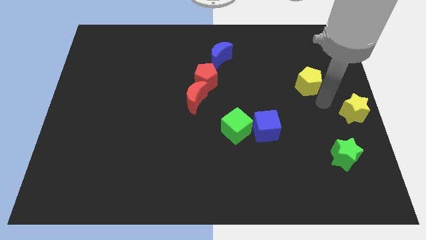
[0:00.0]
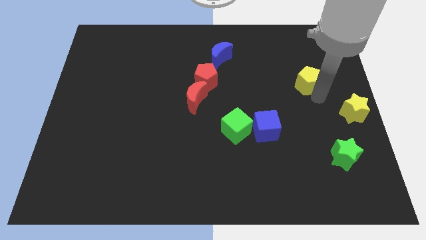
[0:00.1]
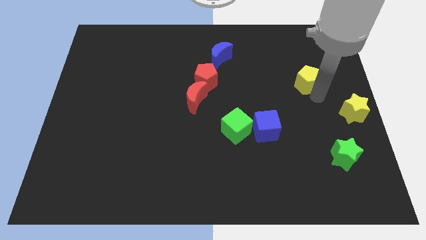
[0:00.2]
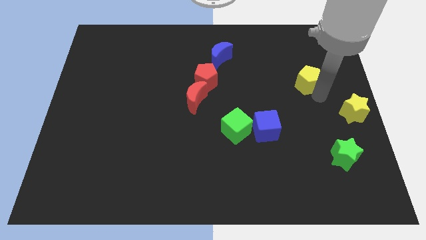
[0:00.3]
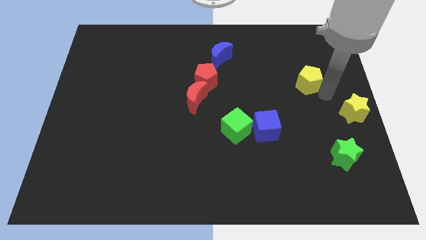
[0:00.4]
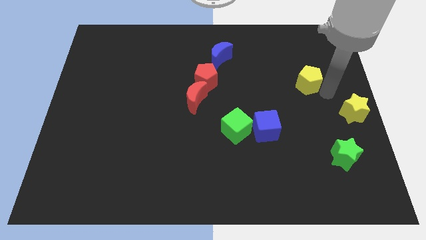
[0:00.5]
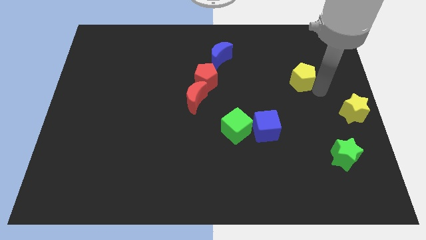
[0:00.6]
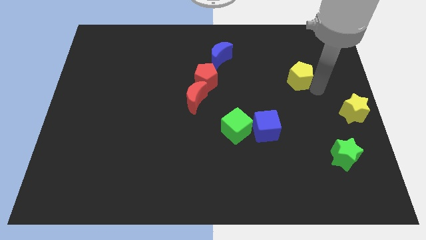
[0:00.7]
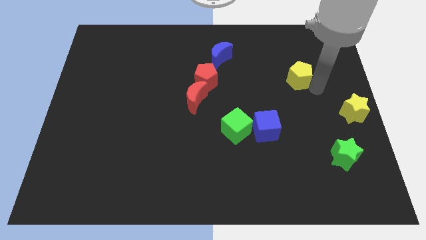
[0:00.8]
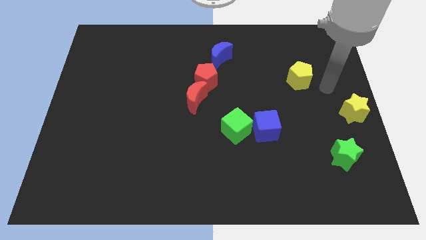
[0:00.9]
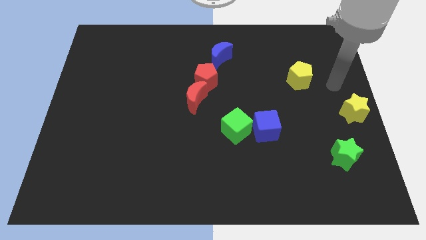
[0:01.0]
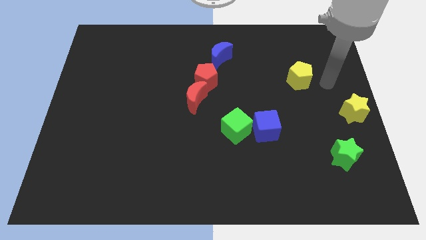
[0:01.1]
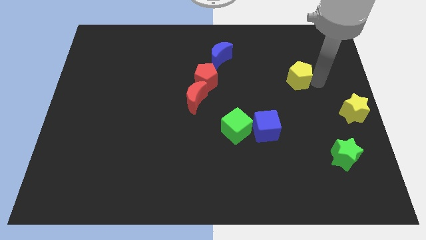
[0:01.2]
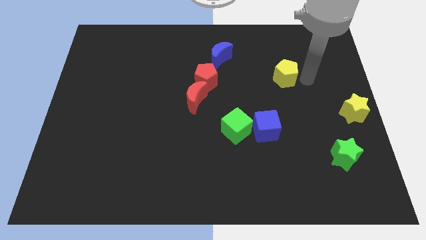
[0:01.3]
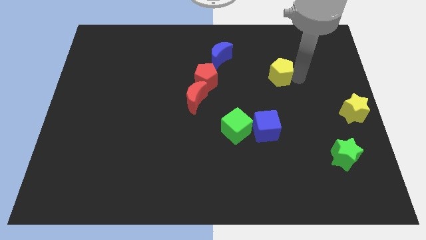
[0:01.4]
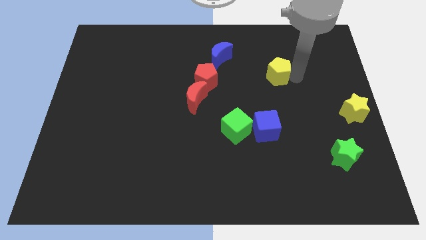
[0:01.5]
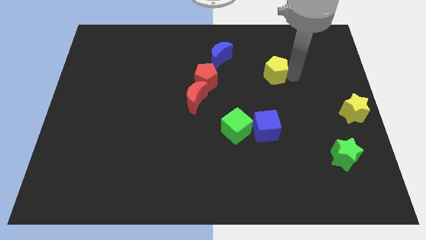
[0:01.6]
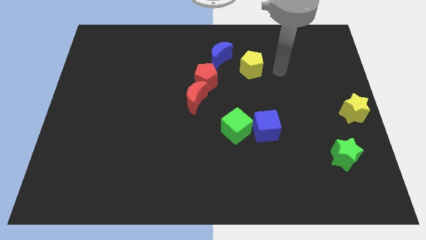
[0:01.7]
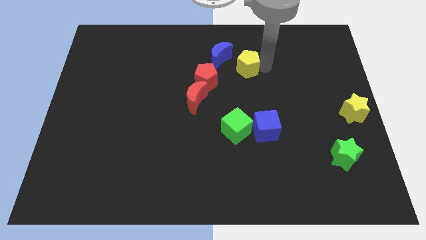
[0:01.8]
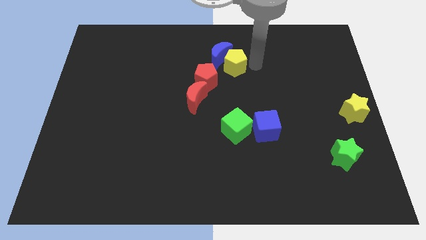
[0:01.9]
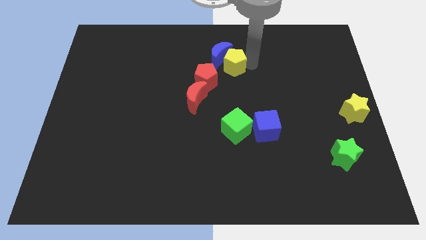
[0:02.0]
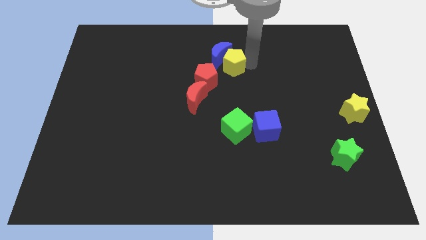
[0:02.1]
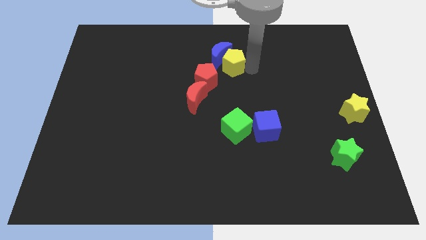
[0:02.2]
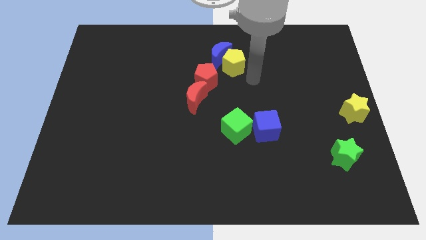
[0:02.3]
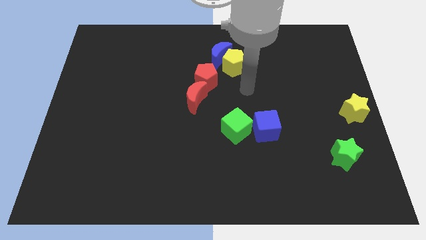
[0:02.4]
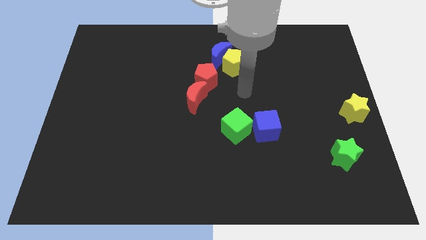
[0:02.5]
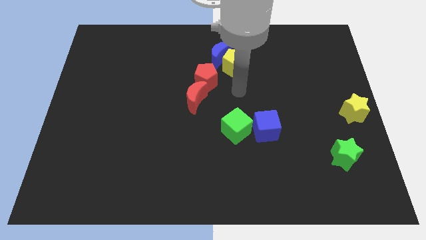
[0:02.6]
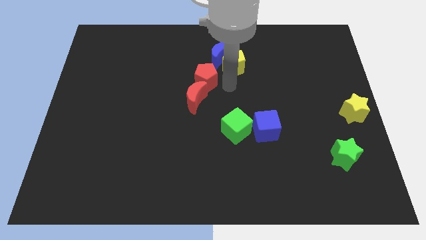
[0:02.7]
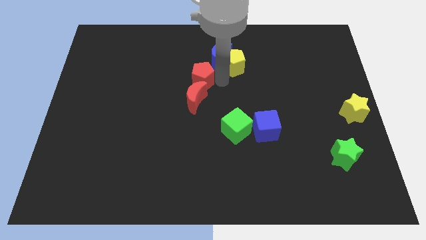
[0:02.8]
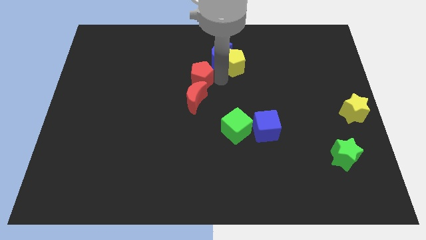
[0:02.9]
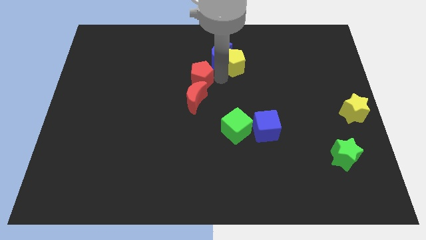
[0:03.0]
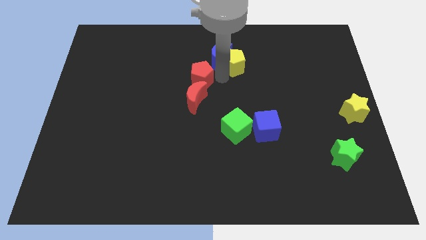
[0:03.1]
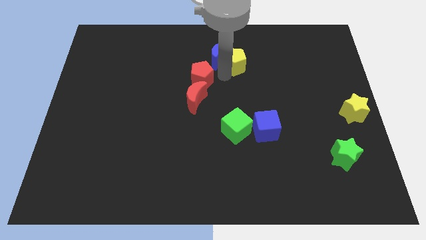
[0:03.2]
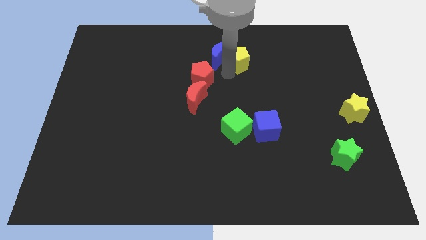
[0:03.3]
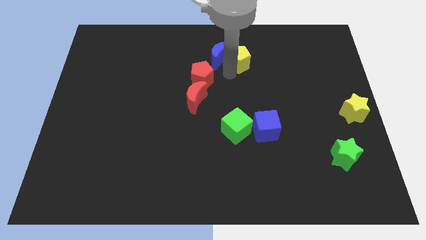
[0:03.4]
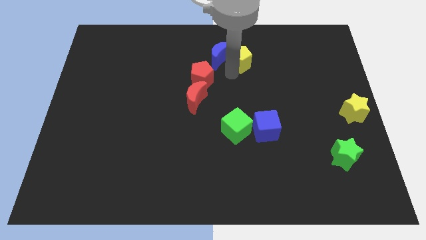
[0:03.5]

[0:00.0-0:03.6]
push the yellow pentagon into the blue moon towards the left side

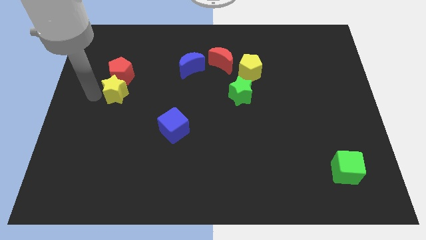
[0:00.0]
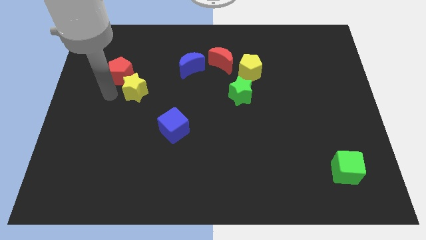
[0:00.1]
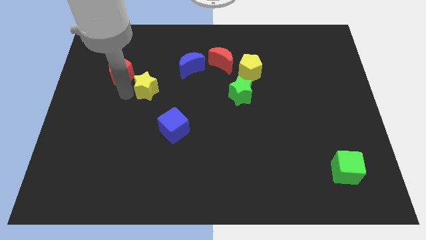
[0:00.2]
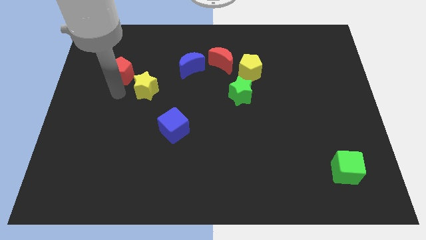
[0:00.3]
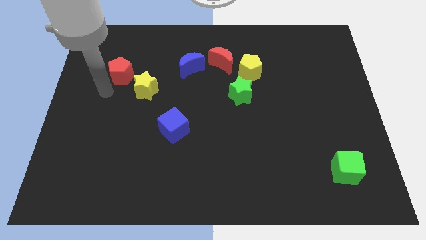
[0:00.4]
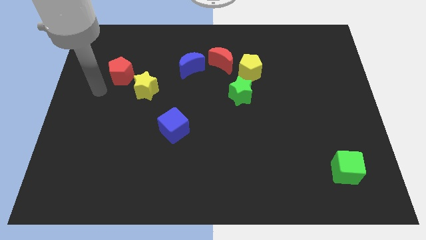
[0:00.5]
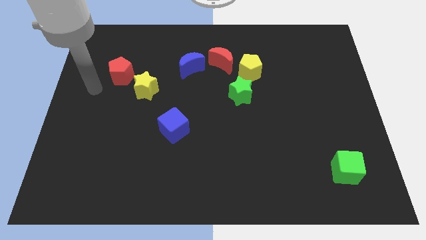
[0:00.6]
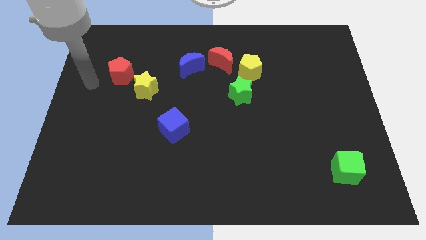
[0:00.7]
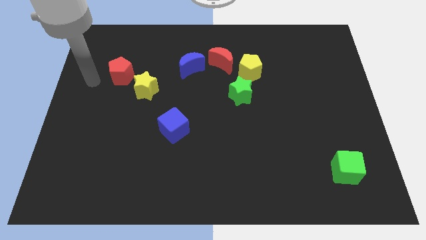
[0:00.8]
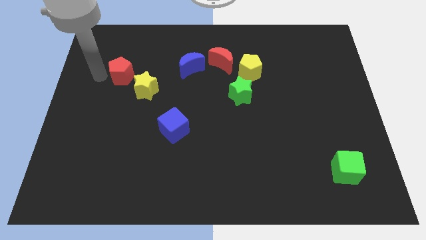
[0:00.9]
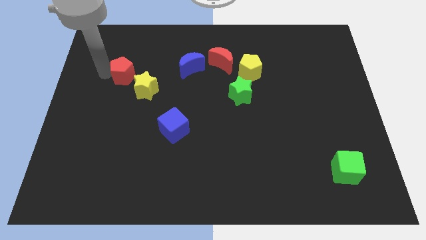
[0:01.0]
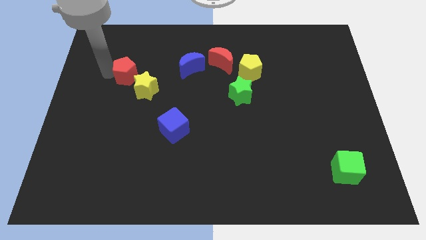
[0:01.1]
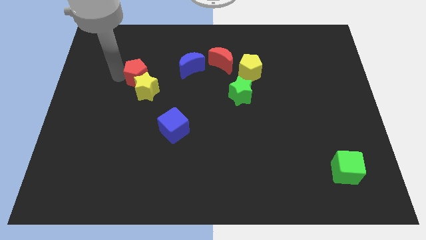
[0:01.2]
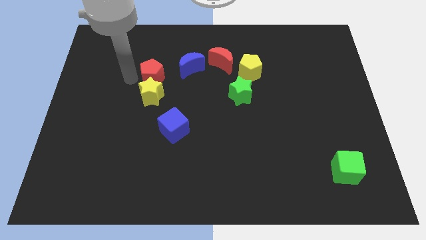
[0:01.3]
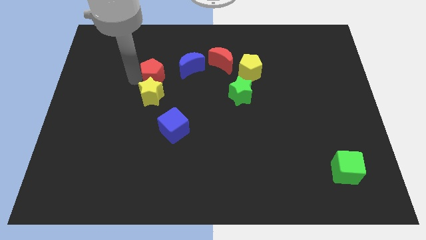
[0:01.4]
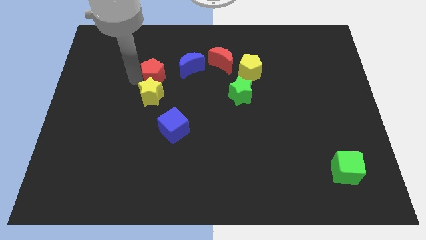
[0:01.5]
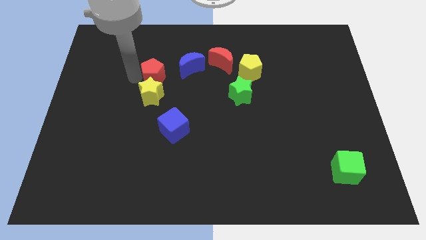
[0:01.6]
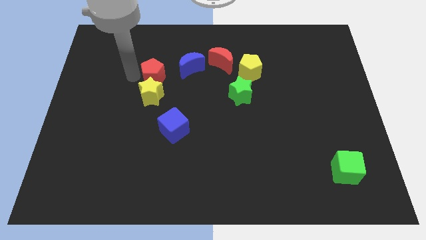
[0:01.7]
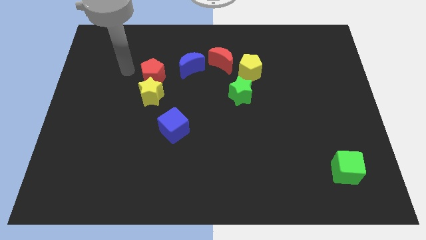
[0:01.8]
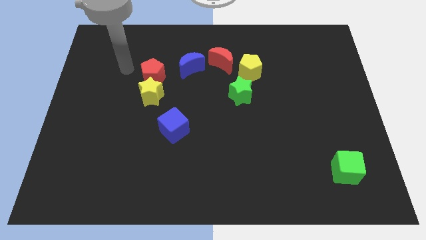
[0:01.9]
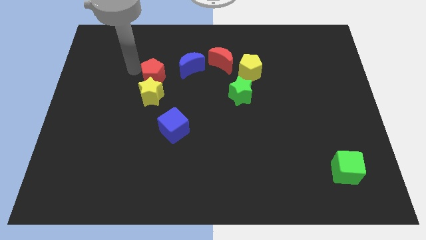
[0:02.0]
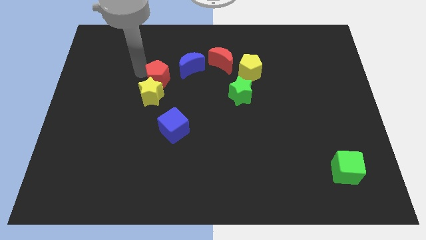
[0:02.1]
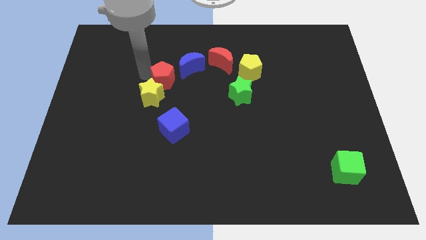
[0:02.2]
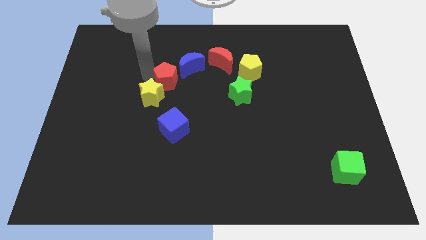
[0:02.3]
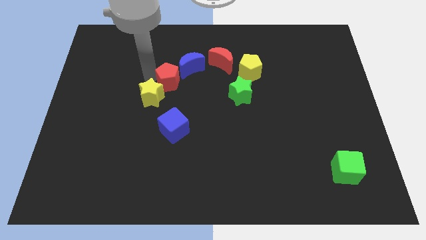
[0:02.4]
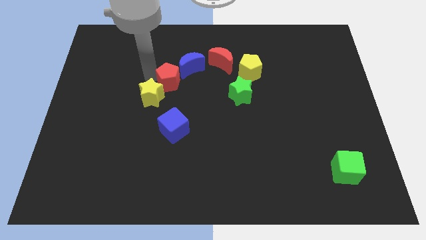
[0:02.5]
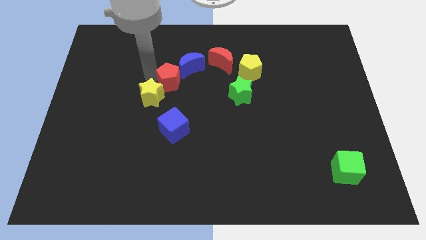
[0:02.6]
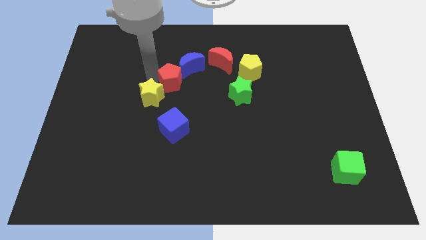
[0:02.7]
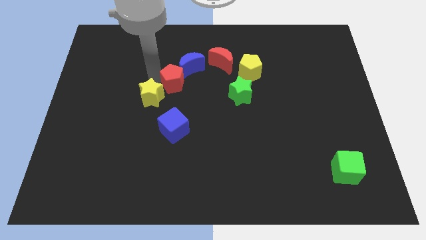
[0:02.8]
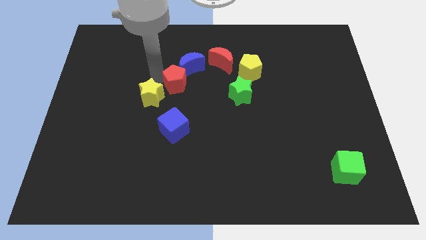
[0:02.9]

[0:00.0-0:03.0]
place red pentagon between yellow star and blue moon

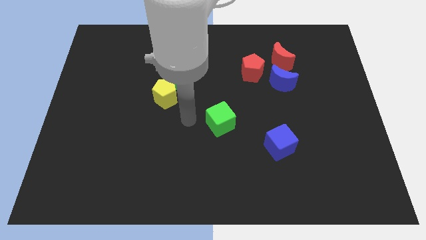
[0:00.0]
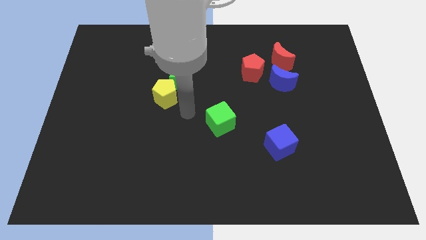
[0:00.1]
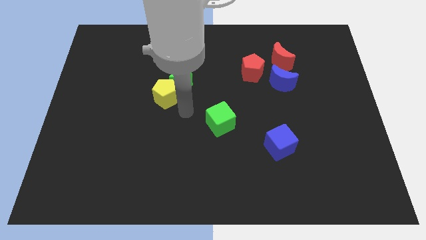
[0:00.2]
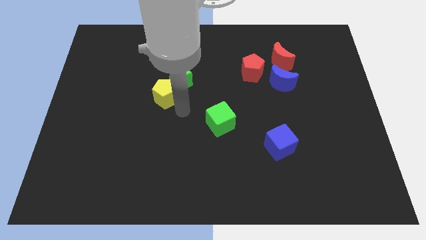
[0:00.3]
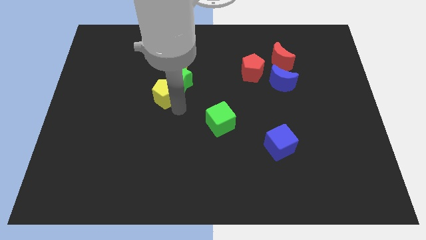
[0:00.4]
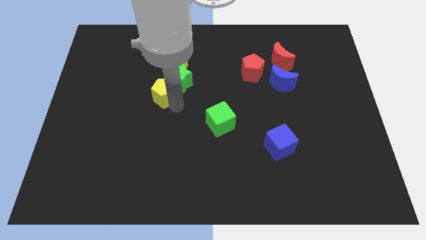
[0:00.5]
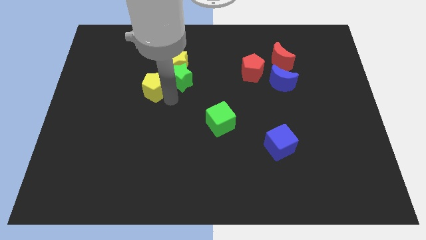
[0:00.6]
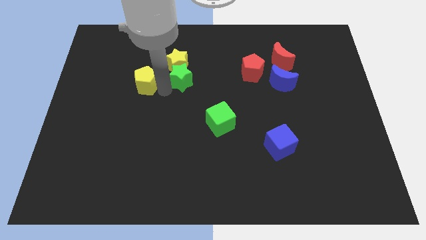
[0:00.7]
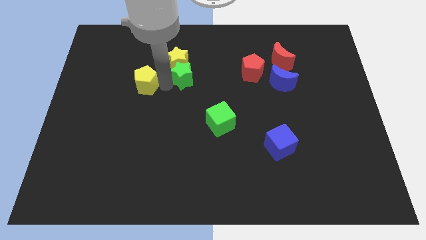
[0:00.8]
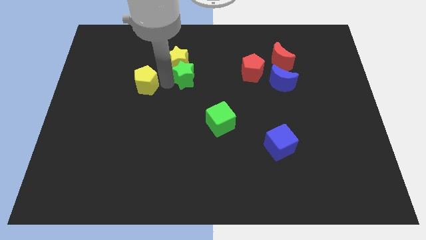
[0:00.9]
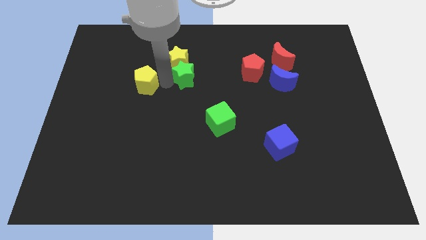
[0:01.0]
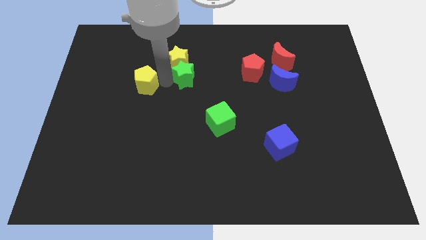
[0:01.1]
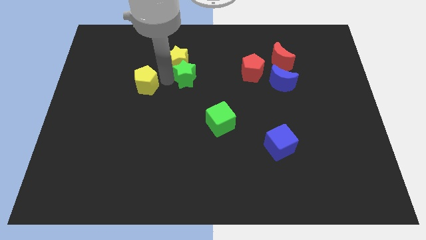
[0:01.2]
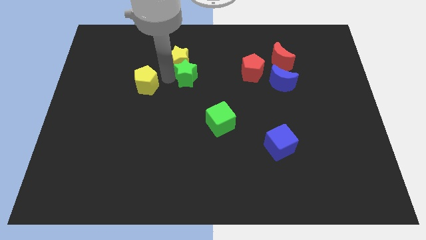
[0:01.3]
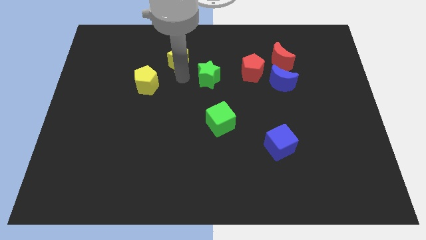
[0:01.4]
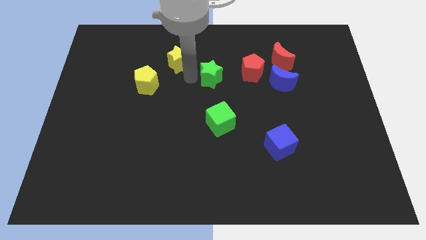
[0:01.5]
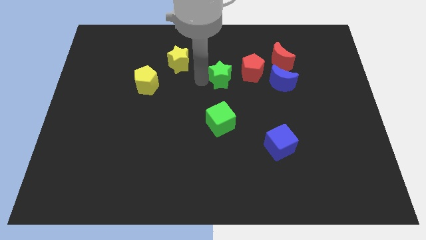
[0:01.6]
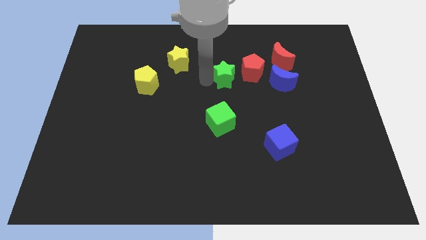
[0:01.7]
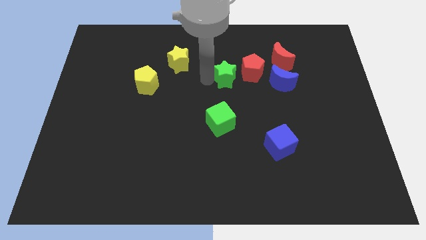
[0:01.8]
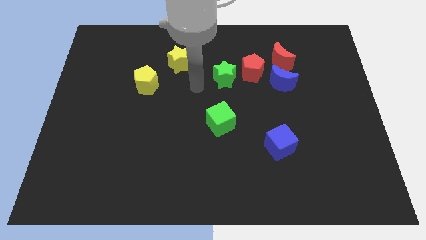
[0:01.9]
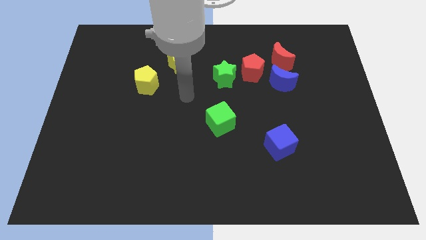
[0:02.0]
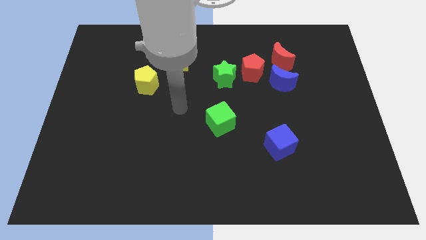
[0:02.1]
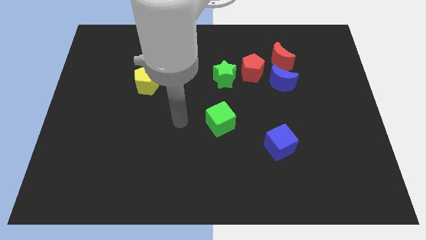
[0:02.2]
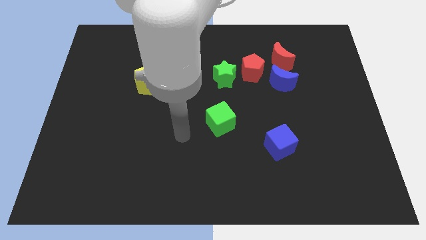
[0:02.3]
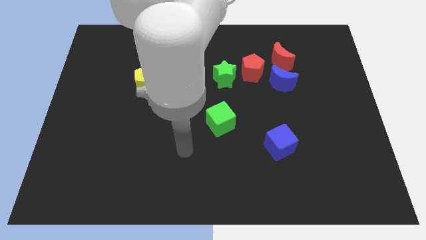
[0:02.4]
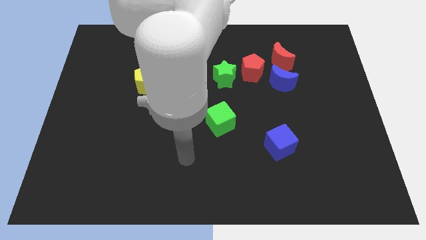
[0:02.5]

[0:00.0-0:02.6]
move the green star left beside the red pentagon
